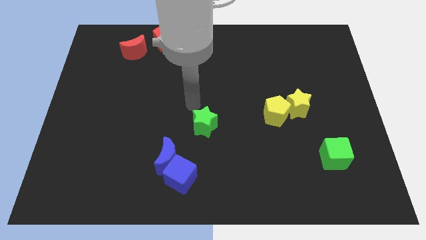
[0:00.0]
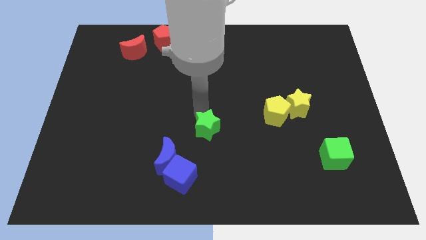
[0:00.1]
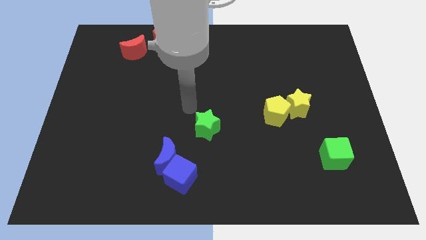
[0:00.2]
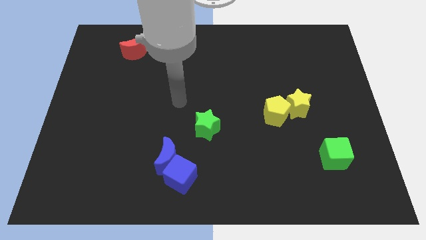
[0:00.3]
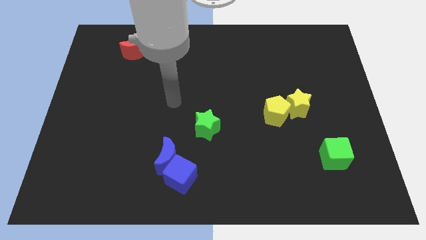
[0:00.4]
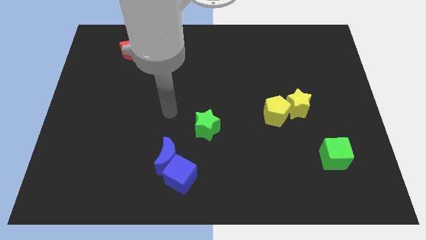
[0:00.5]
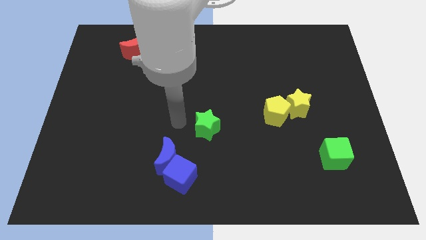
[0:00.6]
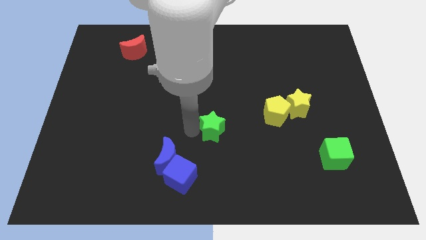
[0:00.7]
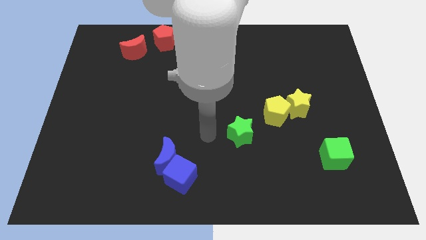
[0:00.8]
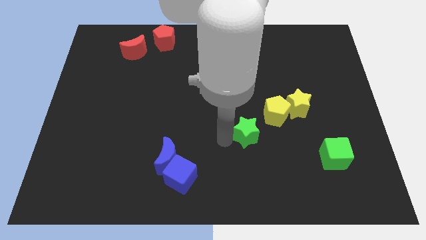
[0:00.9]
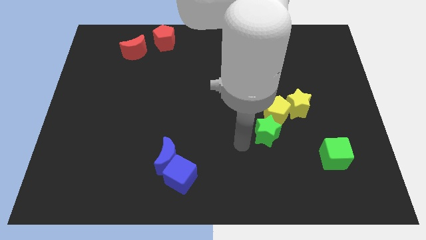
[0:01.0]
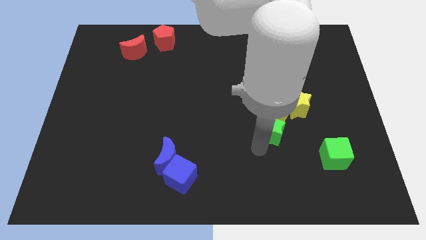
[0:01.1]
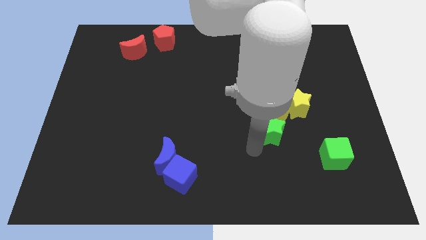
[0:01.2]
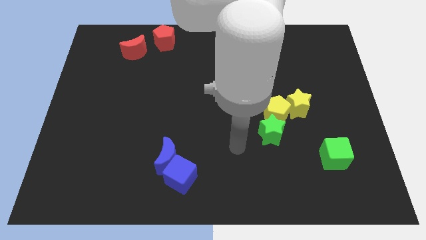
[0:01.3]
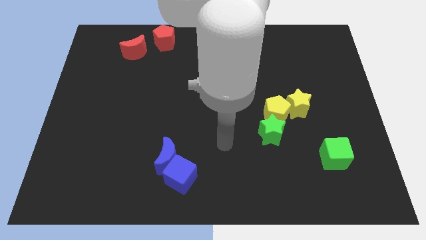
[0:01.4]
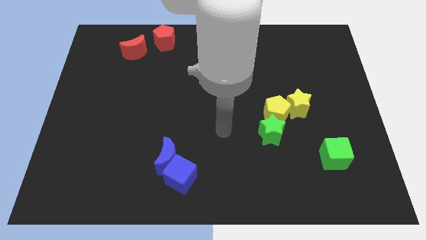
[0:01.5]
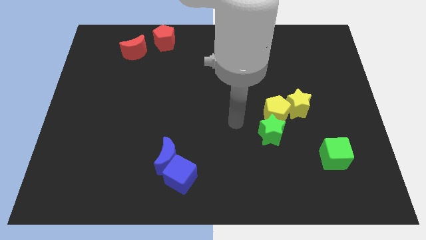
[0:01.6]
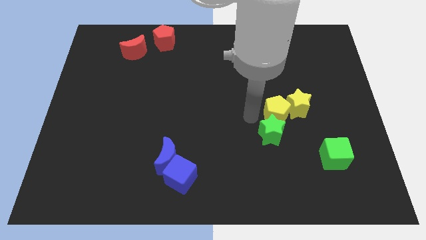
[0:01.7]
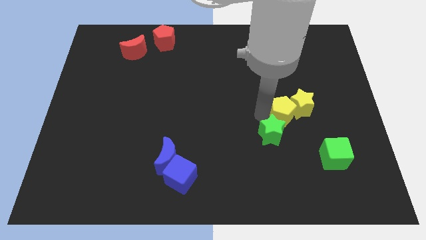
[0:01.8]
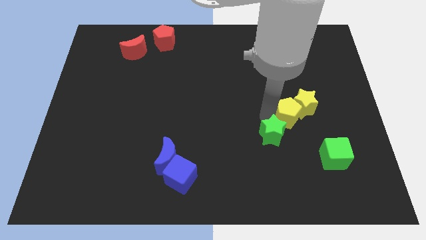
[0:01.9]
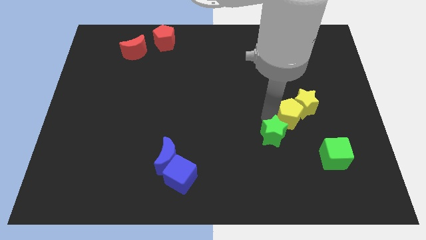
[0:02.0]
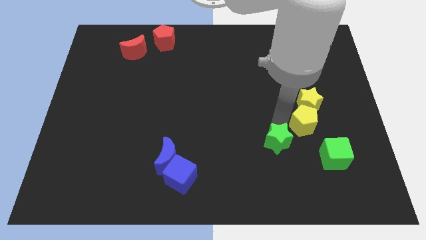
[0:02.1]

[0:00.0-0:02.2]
add green star into yellow pentagon

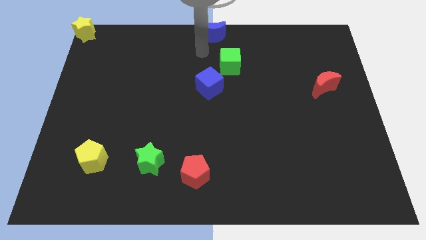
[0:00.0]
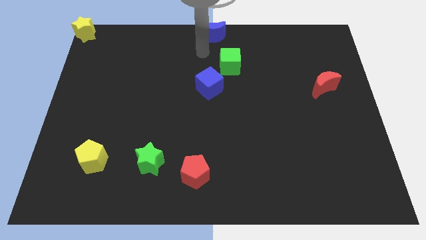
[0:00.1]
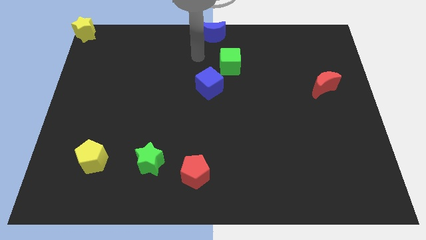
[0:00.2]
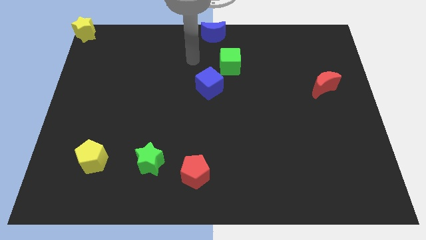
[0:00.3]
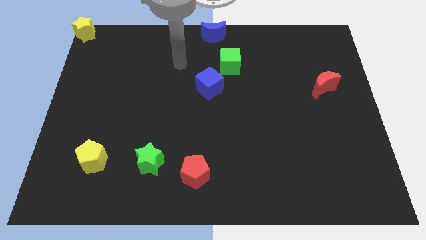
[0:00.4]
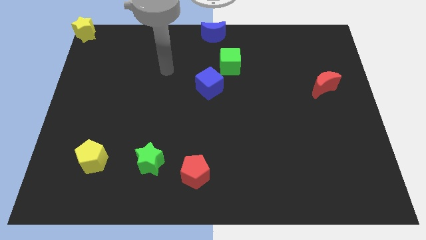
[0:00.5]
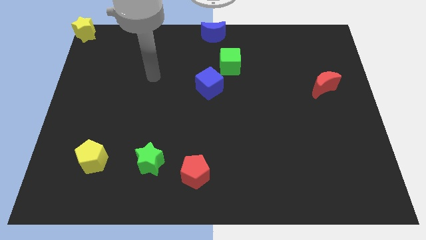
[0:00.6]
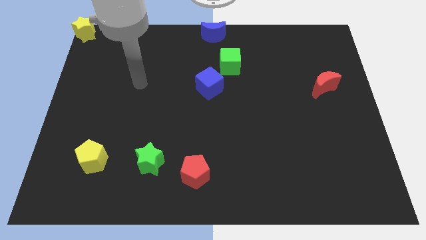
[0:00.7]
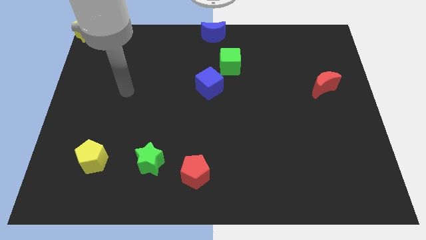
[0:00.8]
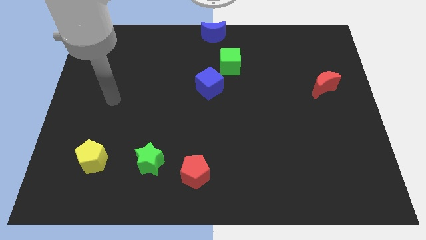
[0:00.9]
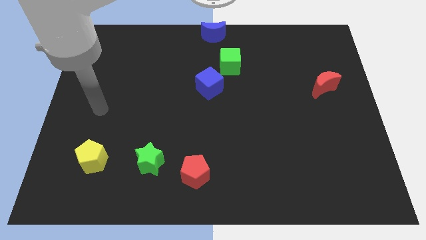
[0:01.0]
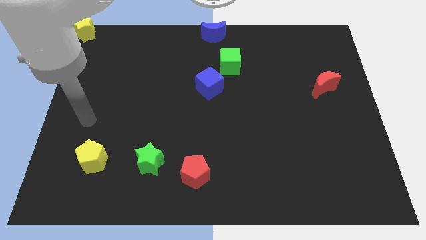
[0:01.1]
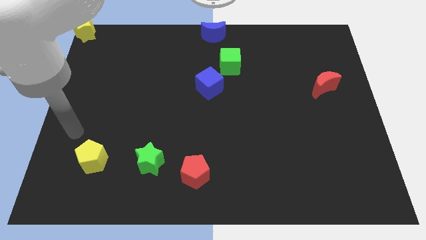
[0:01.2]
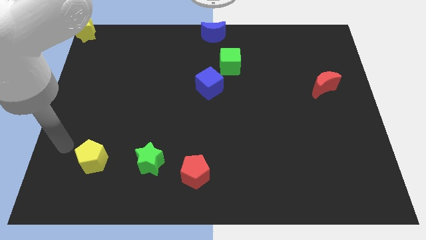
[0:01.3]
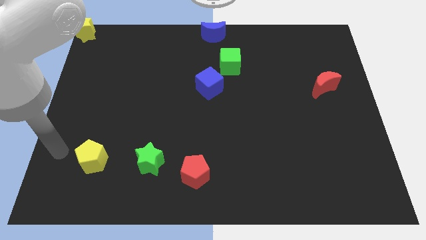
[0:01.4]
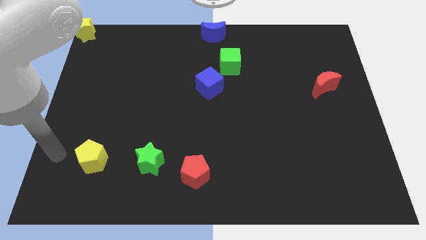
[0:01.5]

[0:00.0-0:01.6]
go away from the blue moon

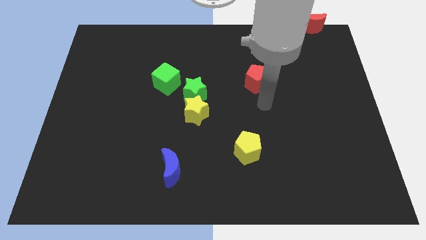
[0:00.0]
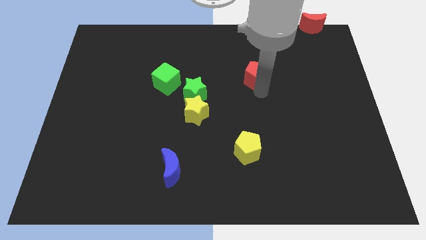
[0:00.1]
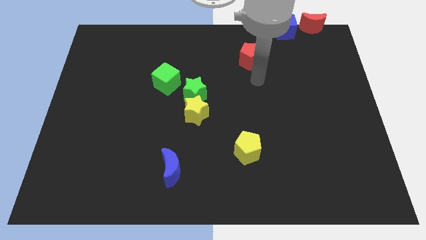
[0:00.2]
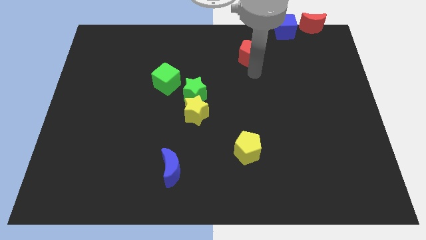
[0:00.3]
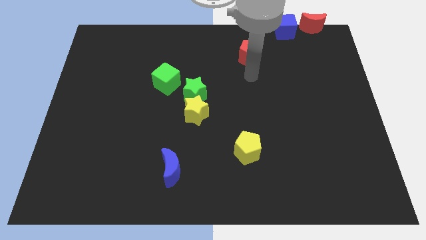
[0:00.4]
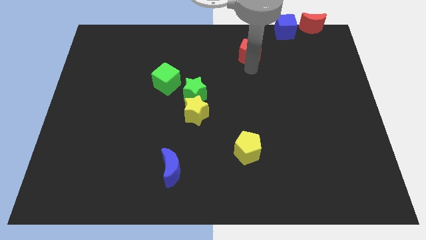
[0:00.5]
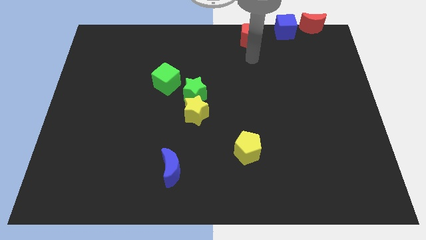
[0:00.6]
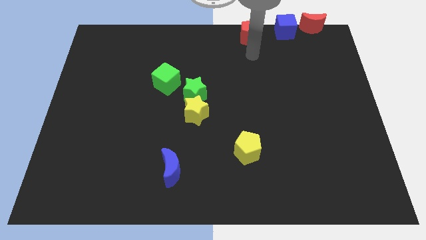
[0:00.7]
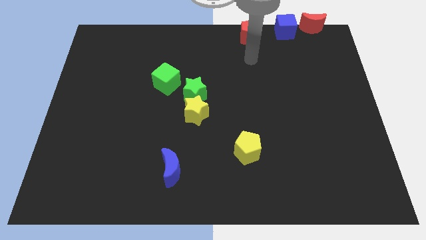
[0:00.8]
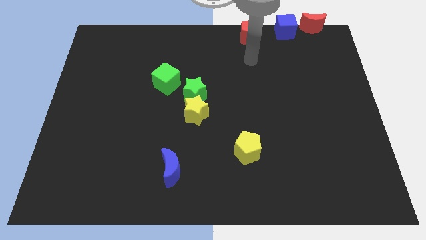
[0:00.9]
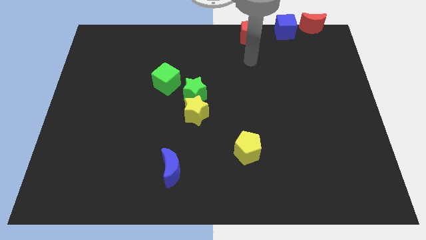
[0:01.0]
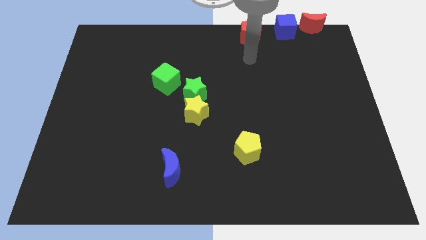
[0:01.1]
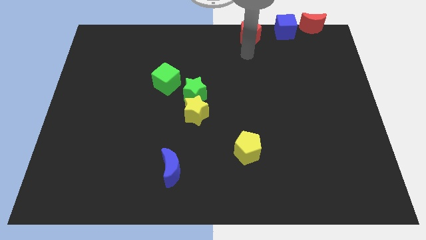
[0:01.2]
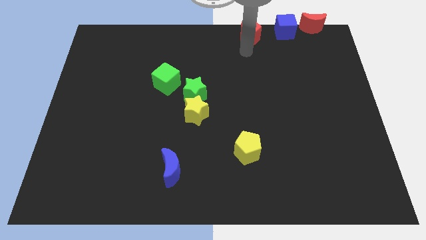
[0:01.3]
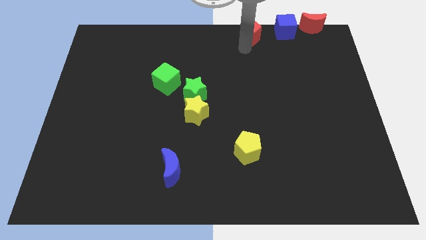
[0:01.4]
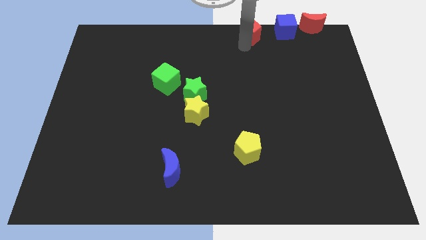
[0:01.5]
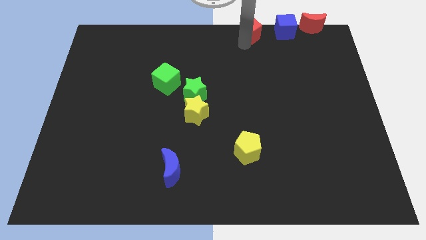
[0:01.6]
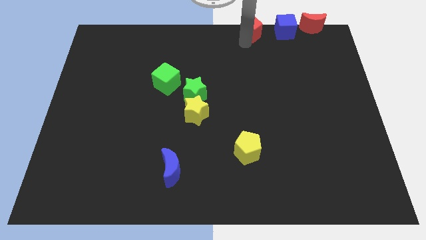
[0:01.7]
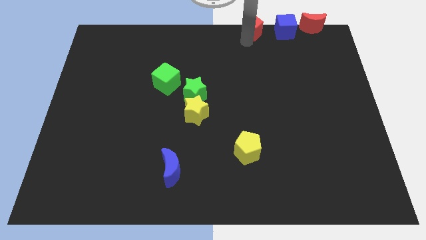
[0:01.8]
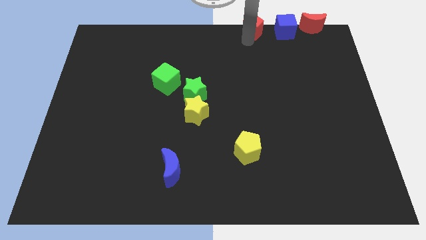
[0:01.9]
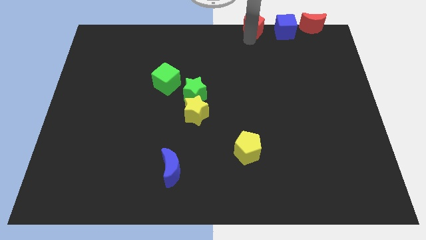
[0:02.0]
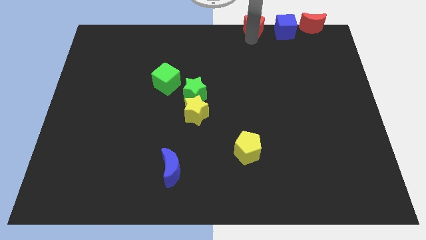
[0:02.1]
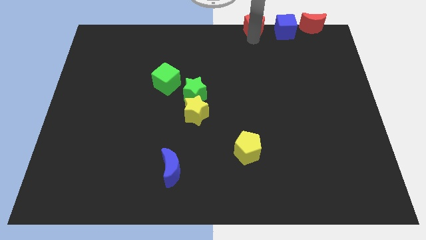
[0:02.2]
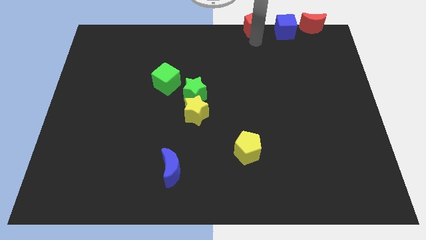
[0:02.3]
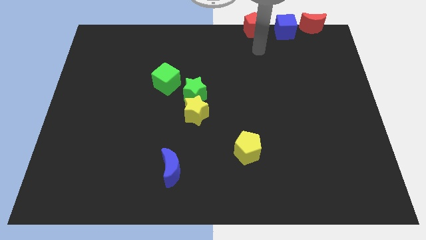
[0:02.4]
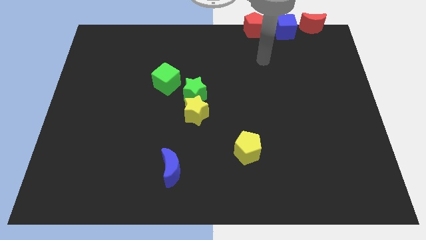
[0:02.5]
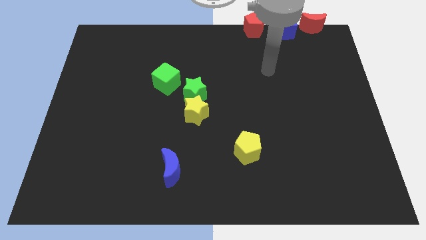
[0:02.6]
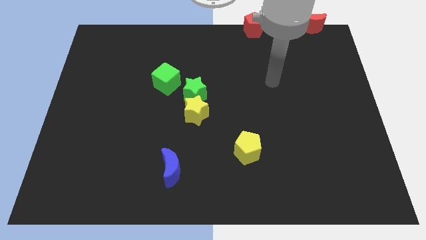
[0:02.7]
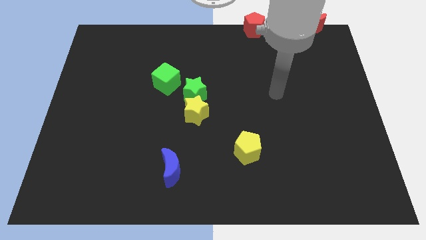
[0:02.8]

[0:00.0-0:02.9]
place red pentagon adjacent to the blue cube

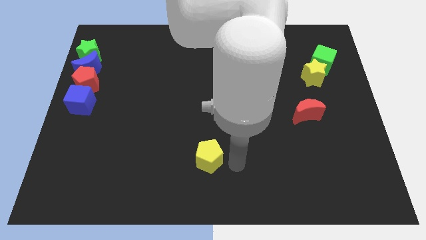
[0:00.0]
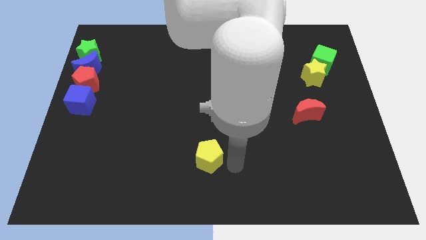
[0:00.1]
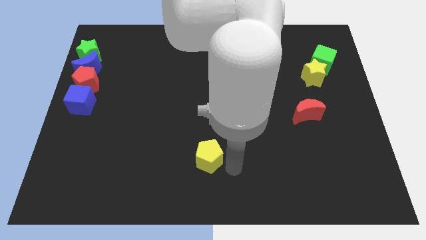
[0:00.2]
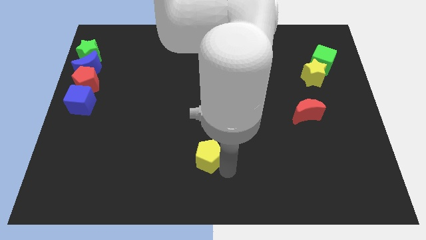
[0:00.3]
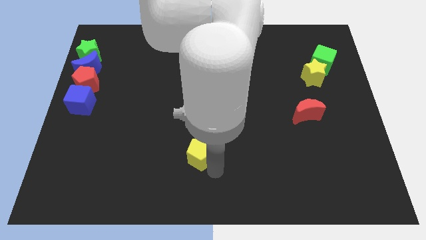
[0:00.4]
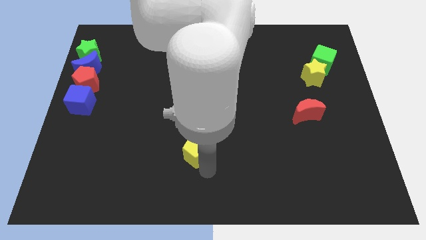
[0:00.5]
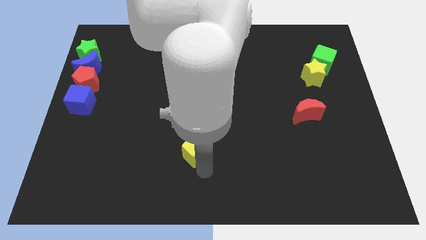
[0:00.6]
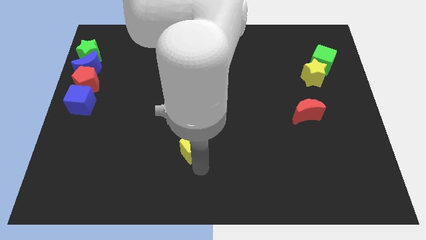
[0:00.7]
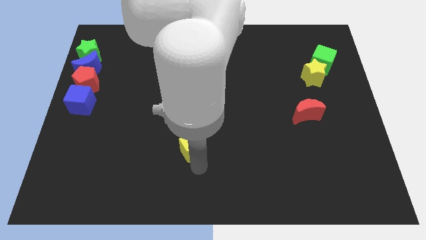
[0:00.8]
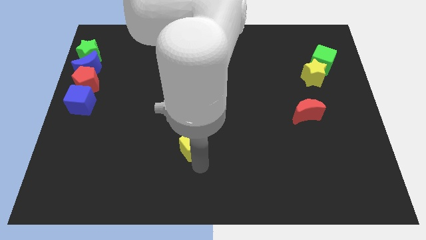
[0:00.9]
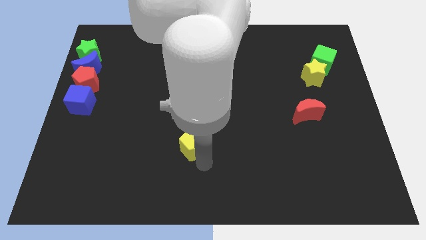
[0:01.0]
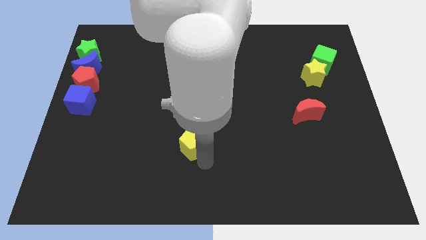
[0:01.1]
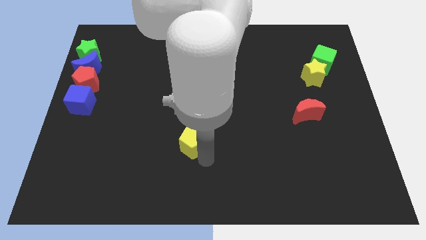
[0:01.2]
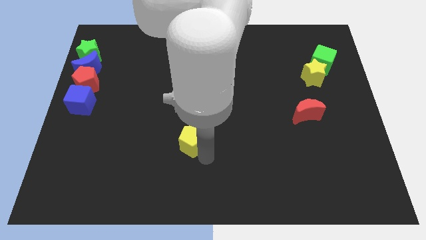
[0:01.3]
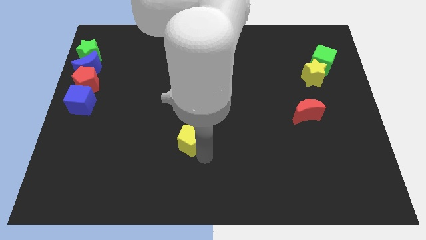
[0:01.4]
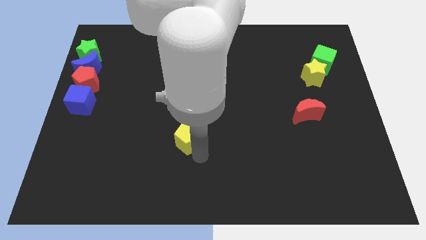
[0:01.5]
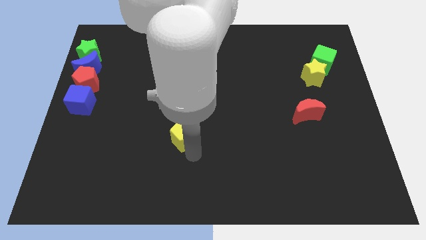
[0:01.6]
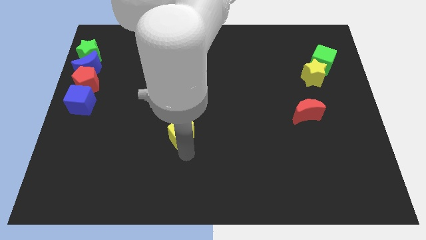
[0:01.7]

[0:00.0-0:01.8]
push the yellow pentagon slightly to the top

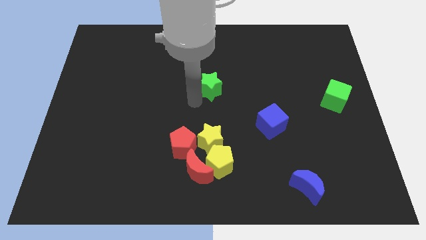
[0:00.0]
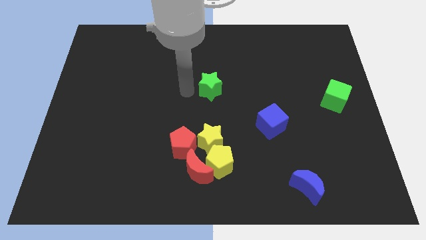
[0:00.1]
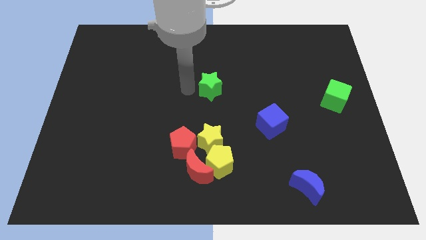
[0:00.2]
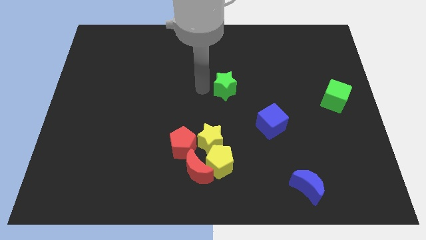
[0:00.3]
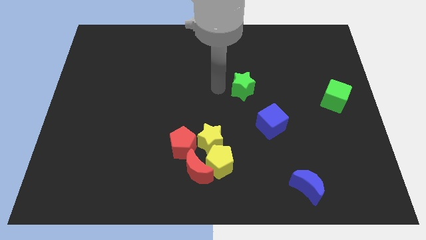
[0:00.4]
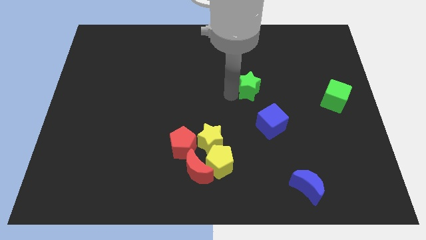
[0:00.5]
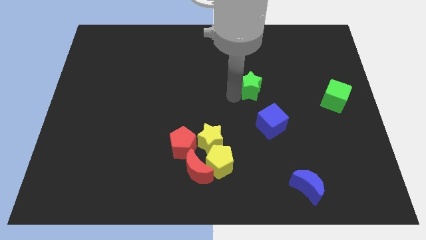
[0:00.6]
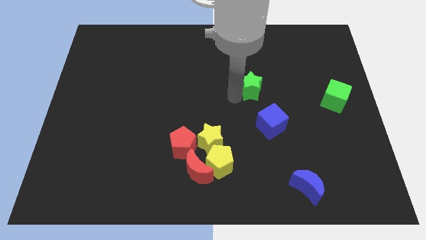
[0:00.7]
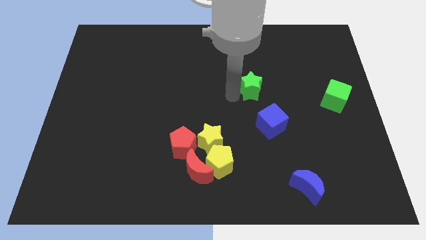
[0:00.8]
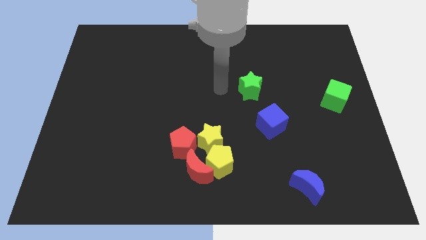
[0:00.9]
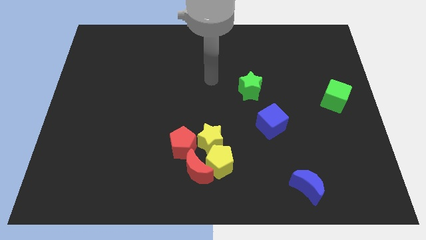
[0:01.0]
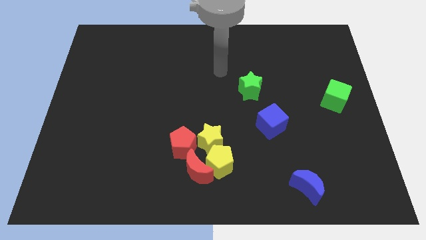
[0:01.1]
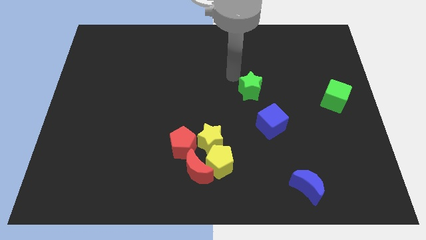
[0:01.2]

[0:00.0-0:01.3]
push the green star to the top left of the blue cube
